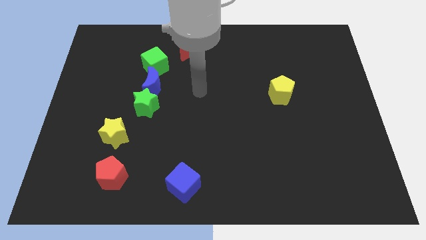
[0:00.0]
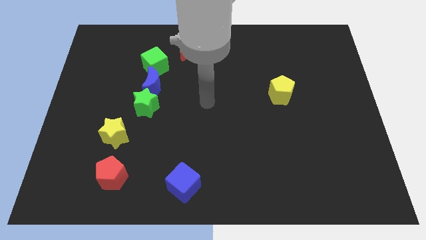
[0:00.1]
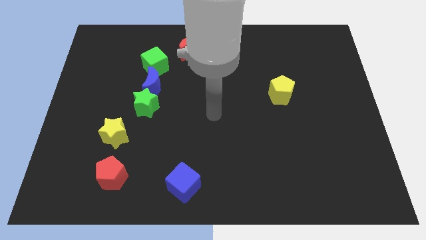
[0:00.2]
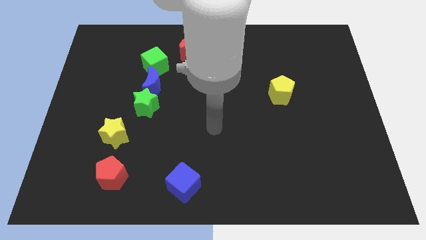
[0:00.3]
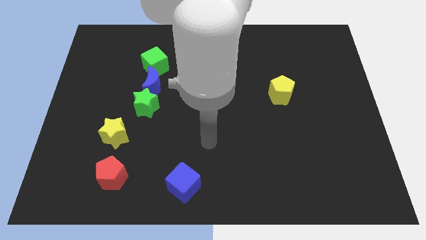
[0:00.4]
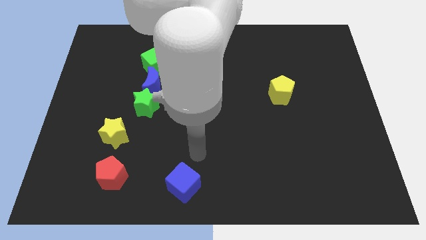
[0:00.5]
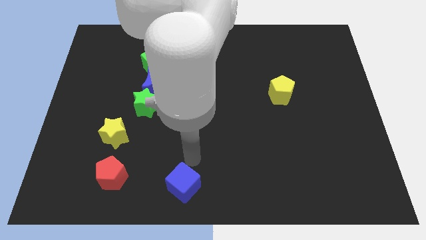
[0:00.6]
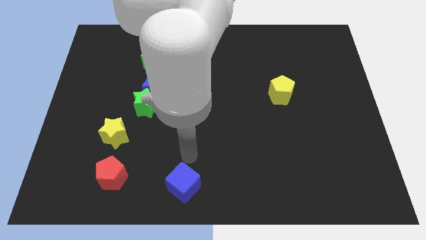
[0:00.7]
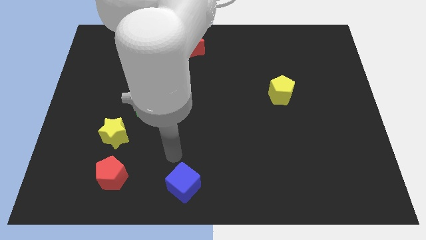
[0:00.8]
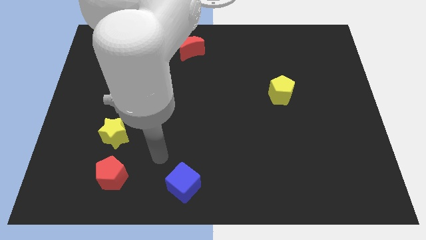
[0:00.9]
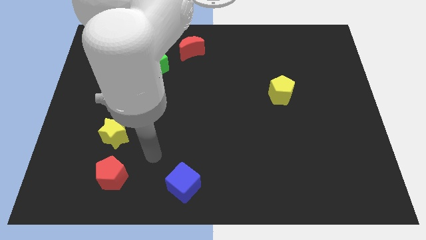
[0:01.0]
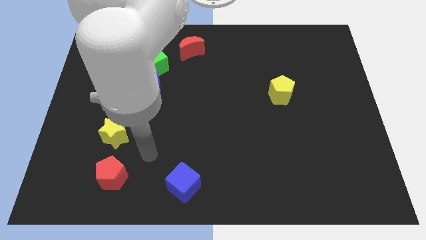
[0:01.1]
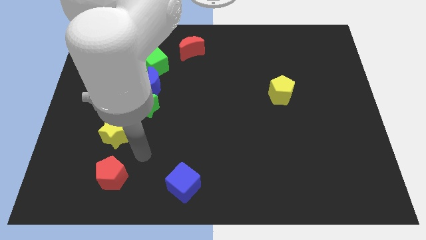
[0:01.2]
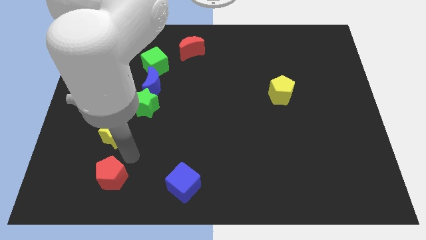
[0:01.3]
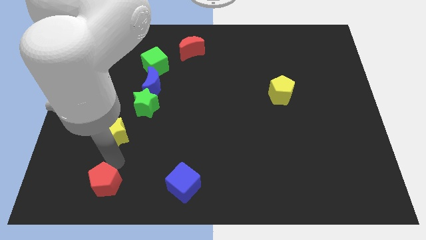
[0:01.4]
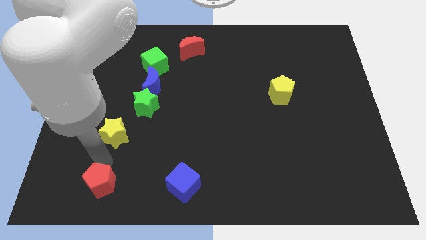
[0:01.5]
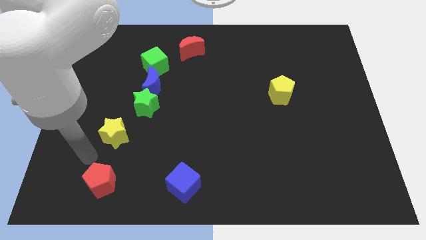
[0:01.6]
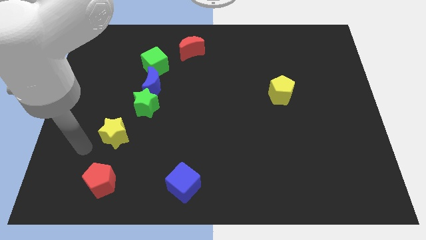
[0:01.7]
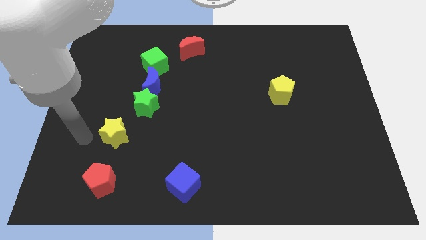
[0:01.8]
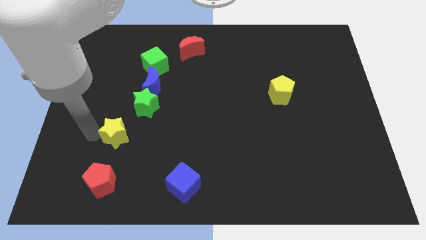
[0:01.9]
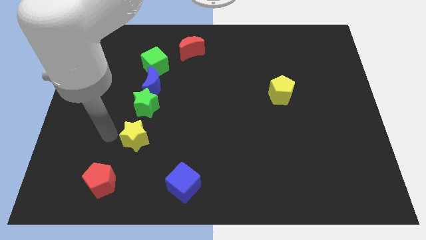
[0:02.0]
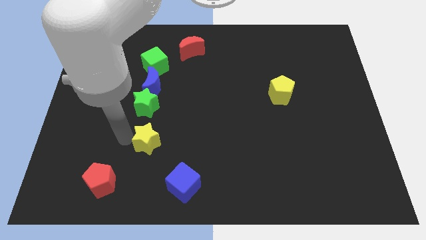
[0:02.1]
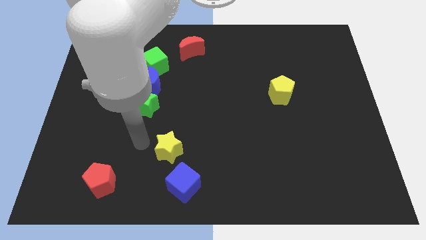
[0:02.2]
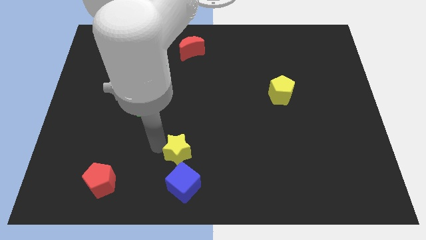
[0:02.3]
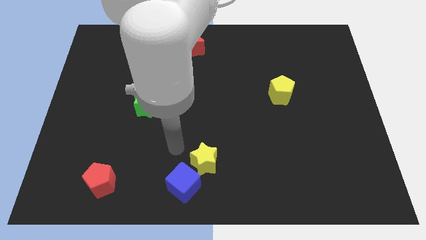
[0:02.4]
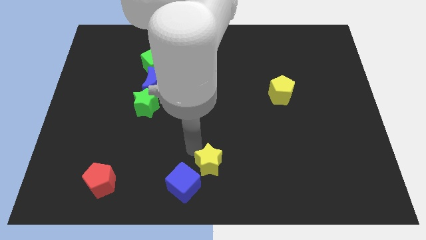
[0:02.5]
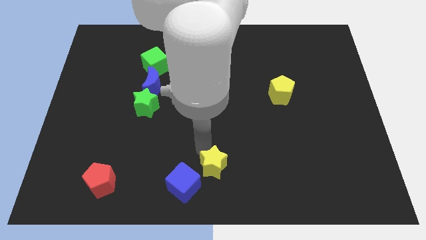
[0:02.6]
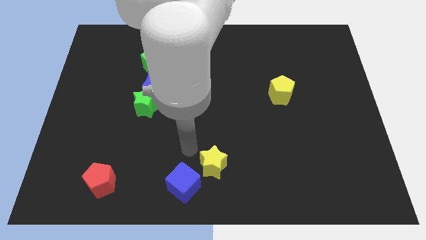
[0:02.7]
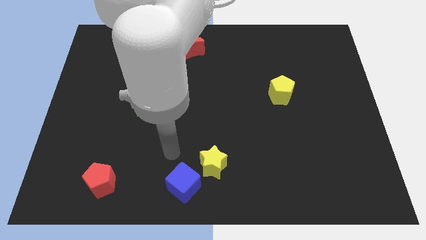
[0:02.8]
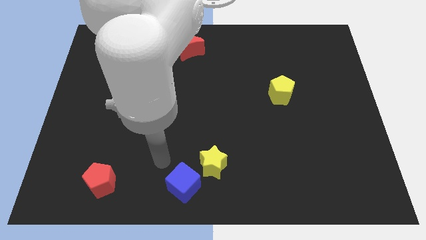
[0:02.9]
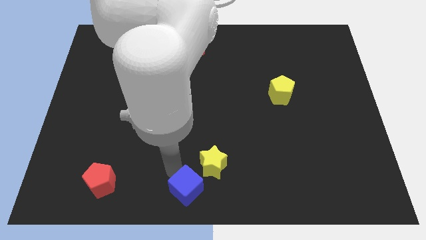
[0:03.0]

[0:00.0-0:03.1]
move yellow star right above blue cube

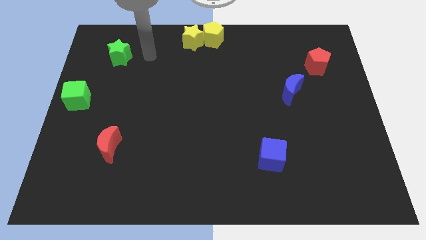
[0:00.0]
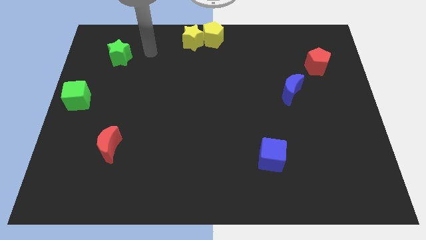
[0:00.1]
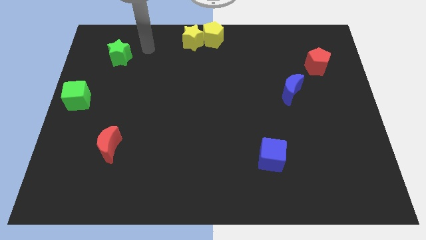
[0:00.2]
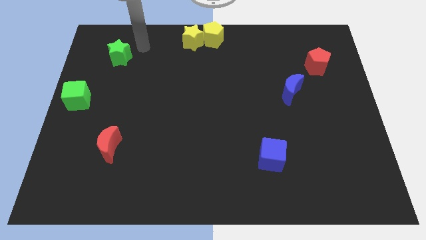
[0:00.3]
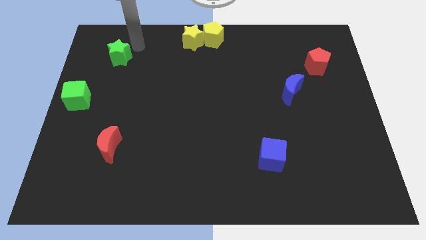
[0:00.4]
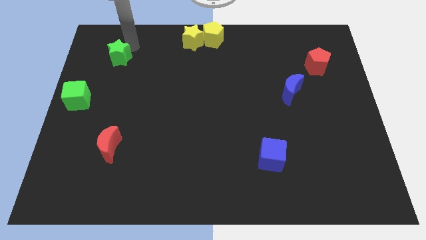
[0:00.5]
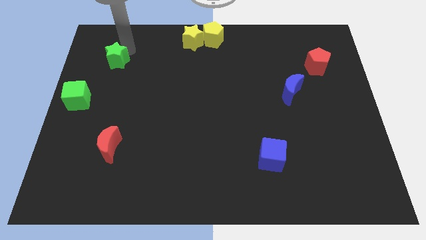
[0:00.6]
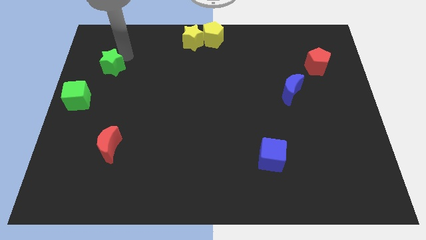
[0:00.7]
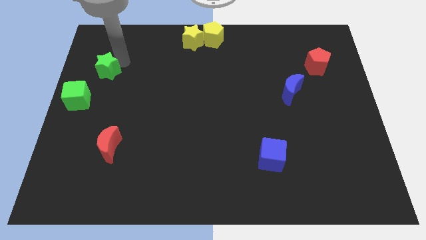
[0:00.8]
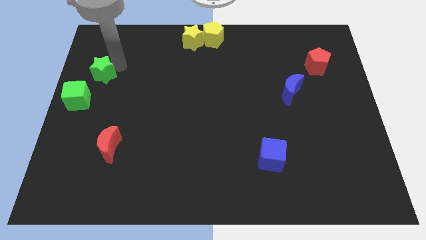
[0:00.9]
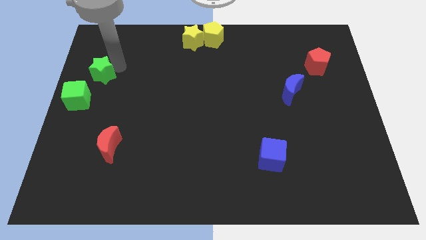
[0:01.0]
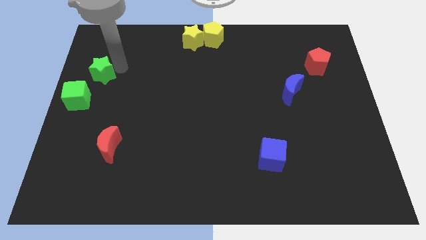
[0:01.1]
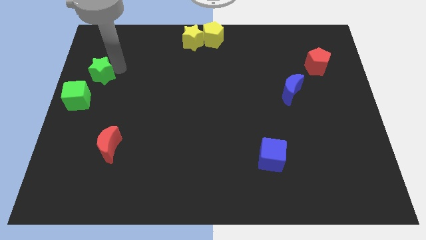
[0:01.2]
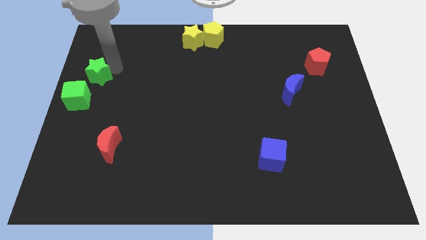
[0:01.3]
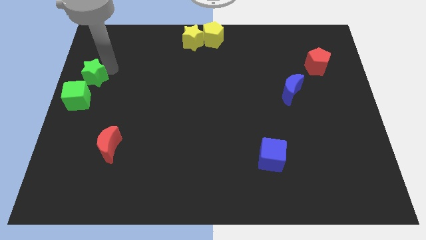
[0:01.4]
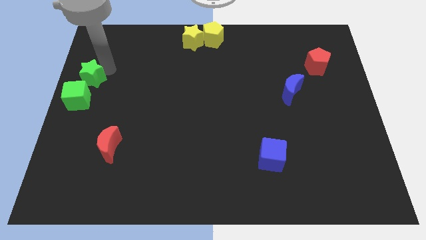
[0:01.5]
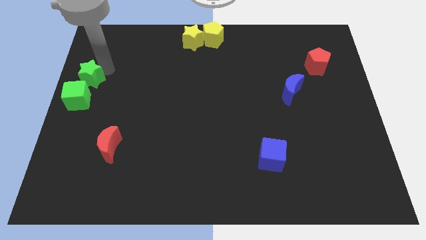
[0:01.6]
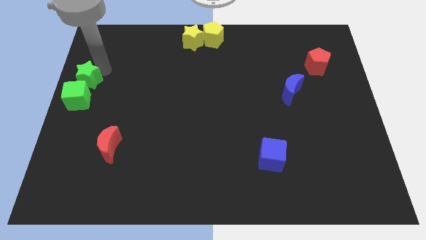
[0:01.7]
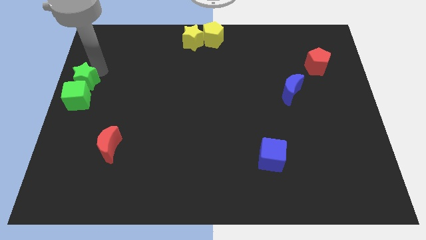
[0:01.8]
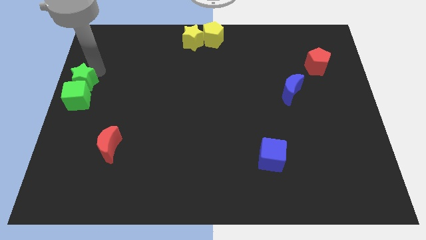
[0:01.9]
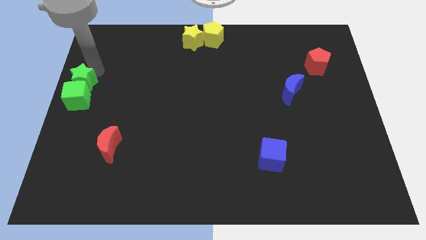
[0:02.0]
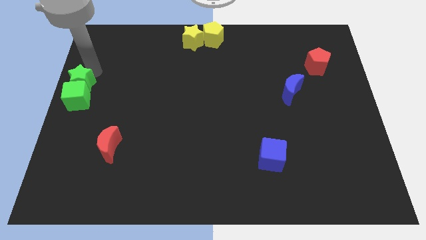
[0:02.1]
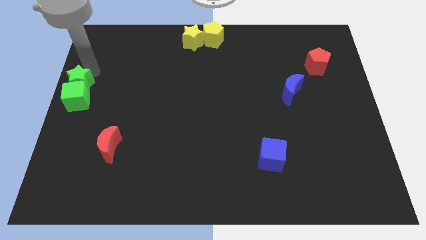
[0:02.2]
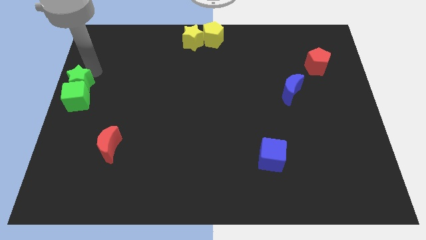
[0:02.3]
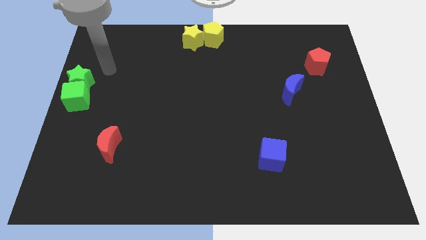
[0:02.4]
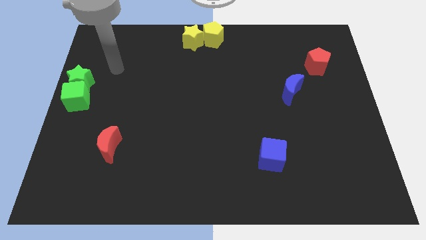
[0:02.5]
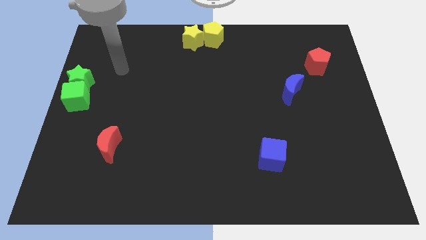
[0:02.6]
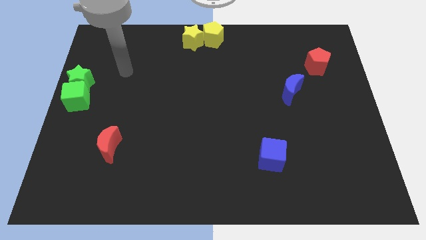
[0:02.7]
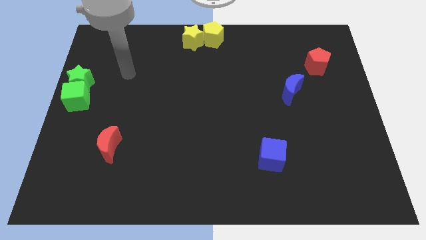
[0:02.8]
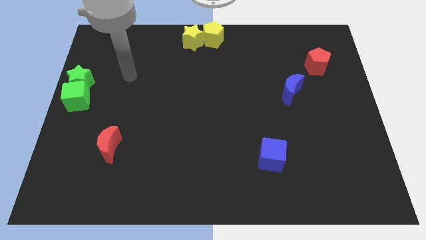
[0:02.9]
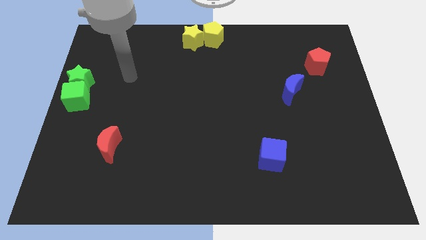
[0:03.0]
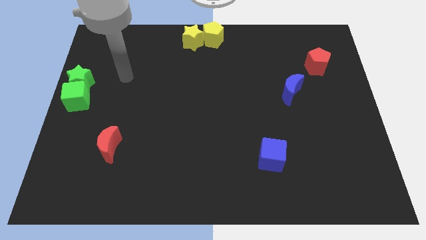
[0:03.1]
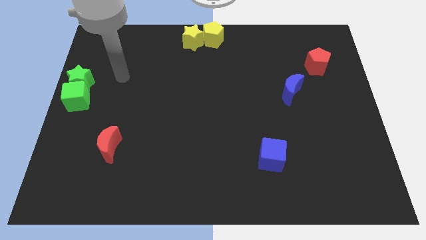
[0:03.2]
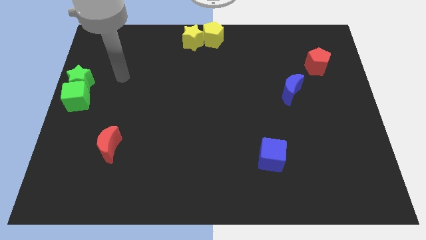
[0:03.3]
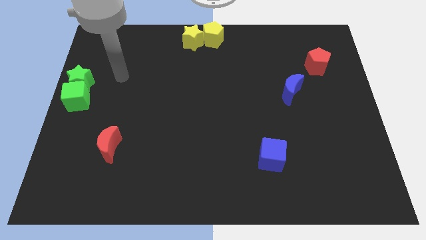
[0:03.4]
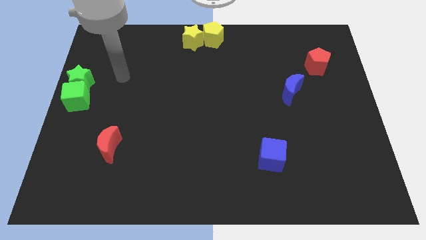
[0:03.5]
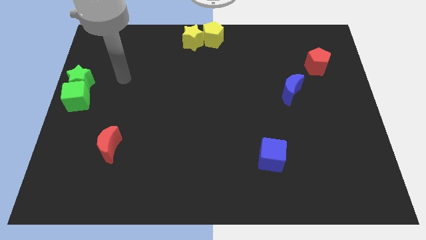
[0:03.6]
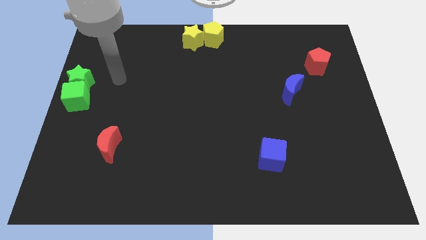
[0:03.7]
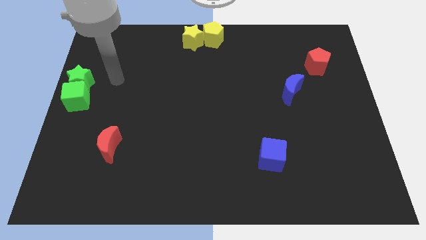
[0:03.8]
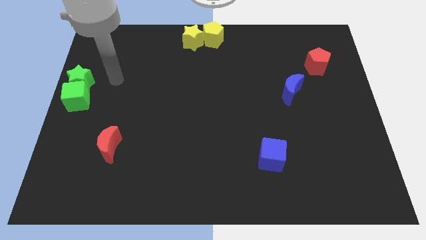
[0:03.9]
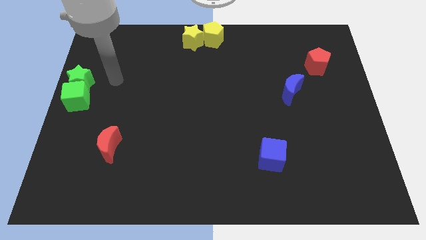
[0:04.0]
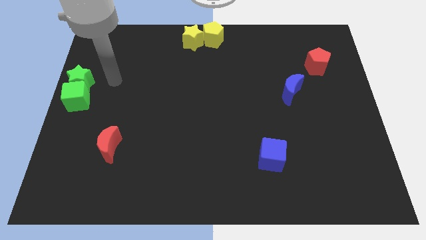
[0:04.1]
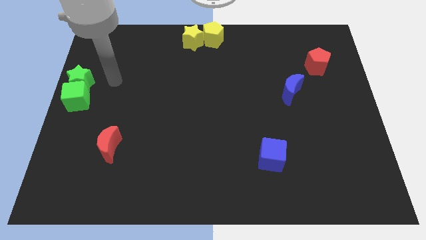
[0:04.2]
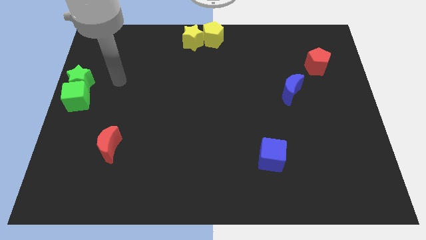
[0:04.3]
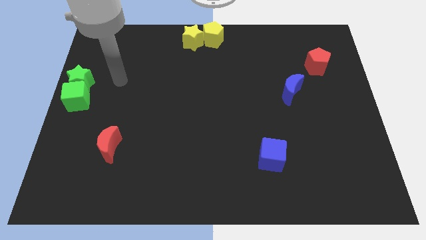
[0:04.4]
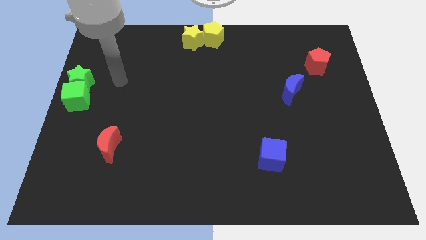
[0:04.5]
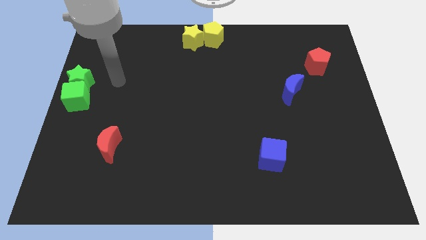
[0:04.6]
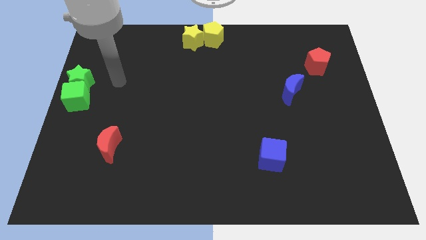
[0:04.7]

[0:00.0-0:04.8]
push the green star into the green cube

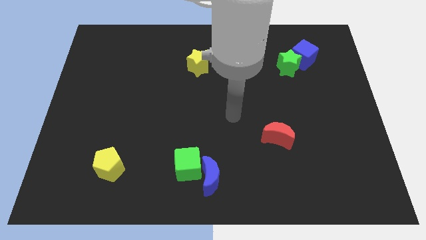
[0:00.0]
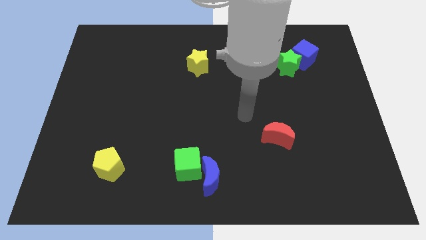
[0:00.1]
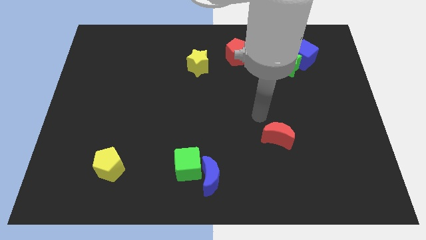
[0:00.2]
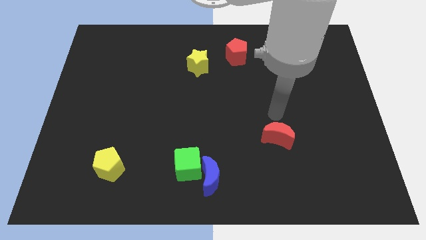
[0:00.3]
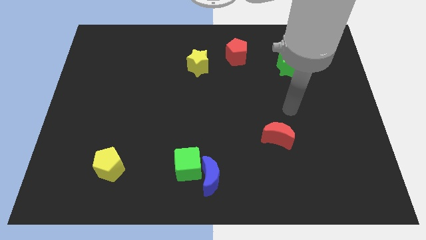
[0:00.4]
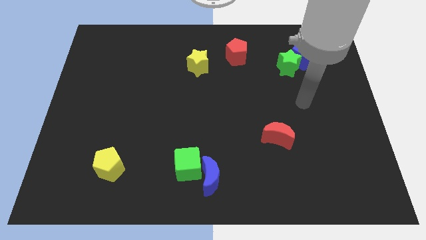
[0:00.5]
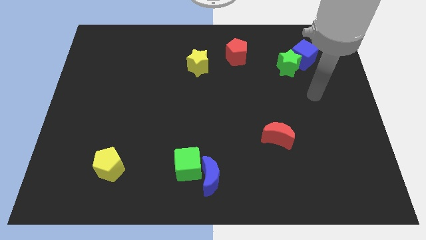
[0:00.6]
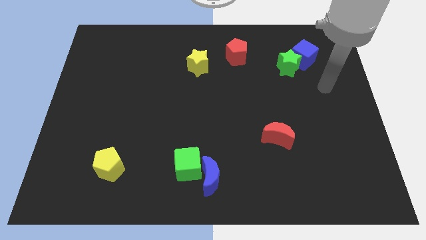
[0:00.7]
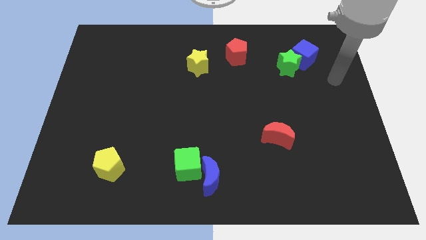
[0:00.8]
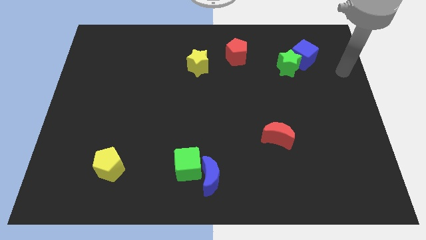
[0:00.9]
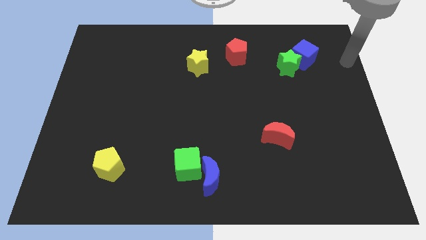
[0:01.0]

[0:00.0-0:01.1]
move your arm towards top right side of the board
